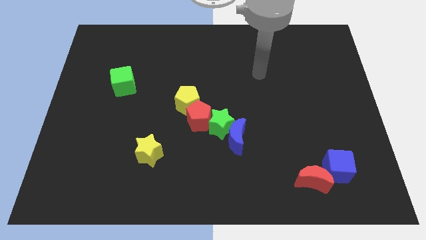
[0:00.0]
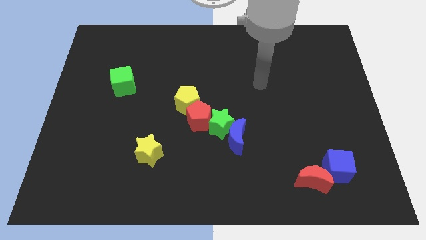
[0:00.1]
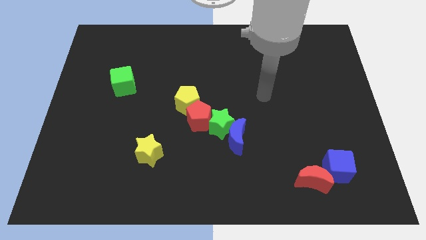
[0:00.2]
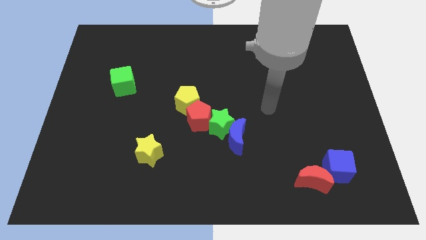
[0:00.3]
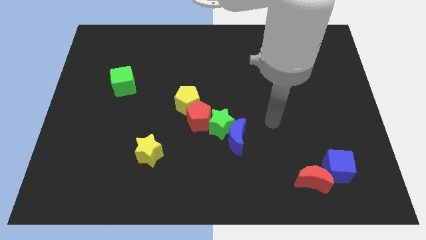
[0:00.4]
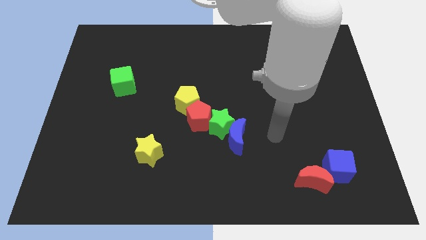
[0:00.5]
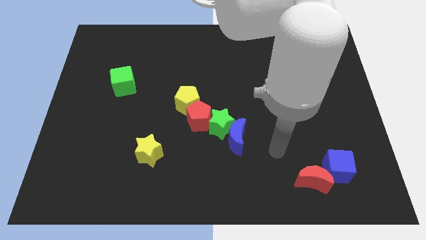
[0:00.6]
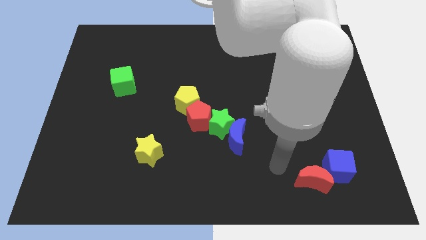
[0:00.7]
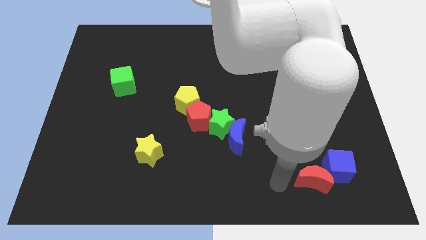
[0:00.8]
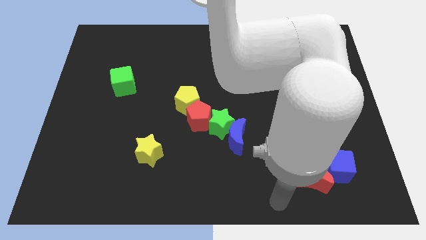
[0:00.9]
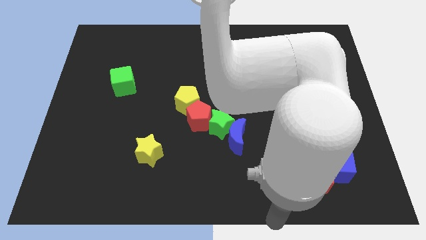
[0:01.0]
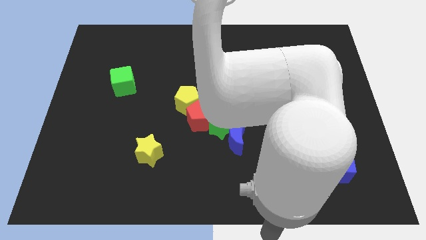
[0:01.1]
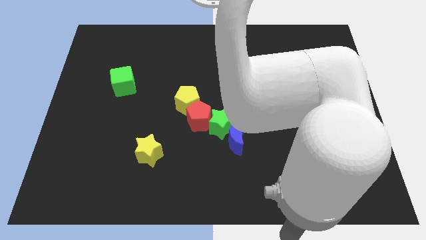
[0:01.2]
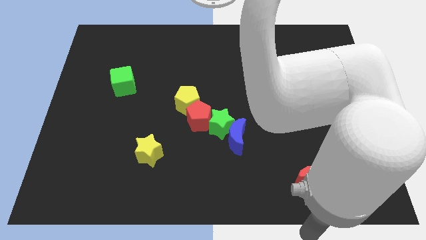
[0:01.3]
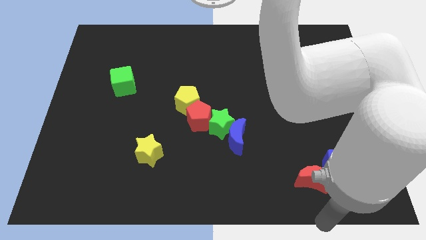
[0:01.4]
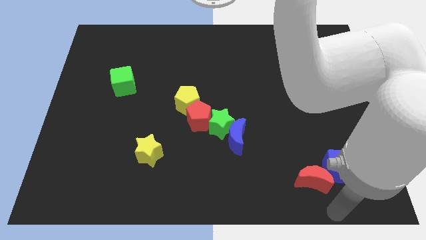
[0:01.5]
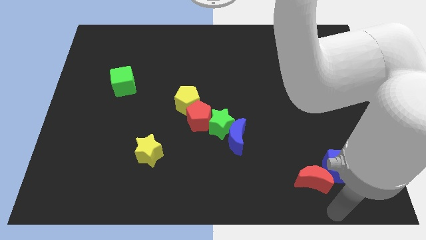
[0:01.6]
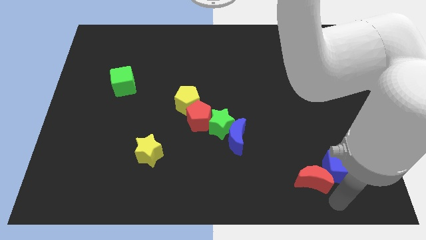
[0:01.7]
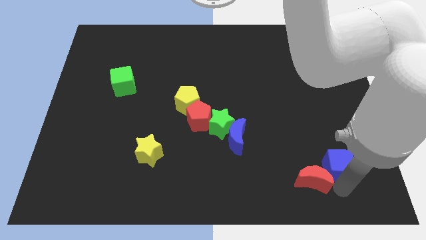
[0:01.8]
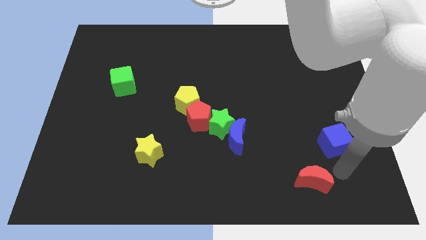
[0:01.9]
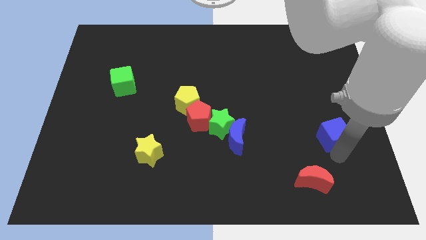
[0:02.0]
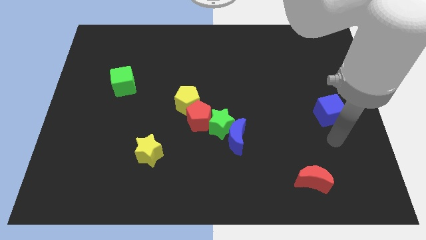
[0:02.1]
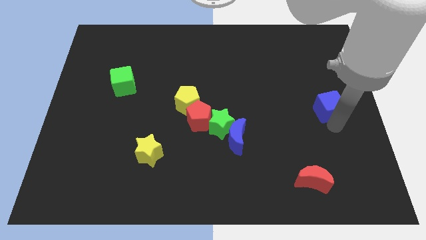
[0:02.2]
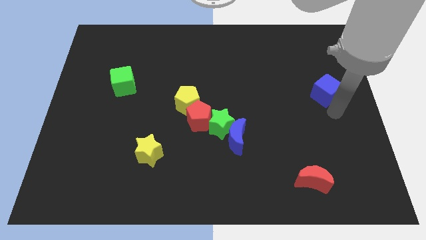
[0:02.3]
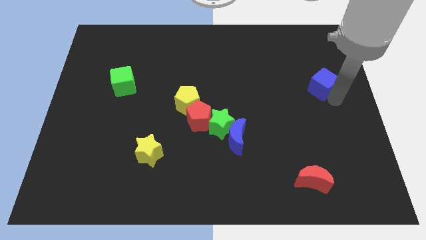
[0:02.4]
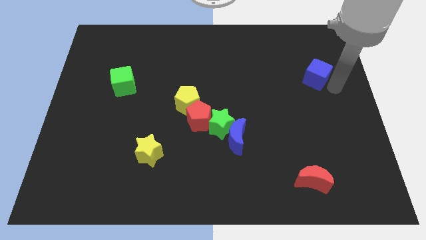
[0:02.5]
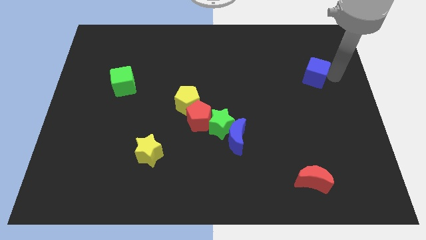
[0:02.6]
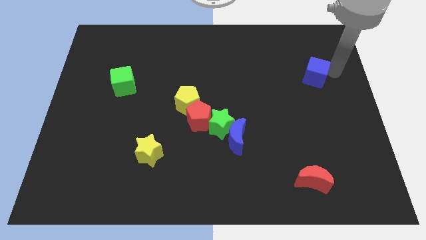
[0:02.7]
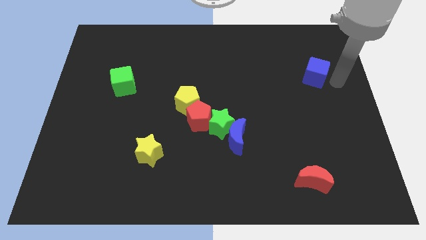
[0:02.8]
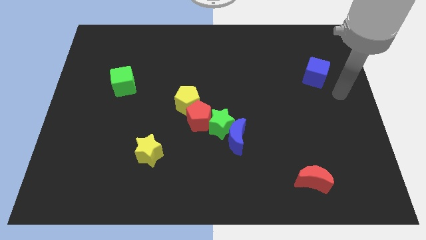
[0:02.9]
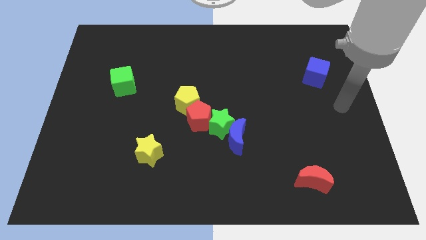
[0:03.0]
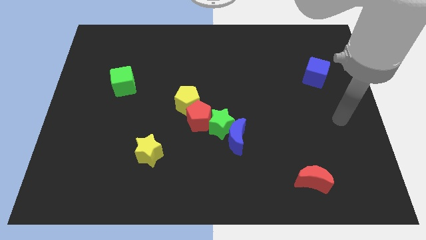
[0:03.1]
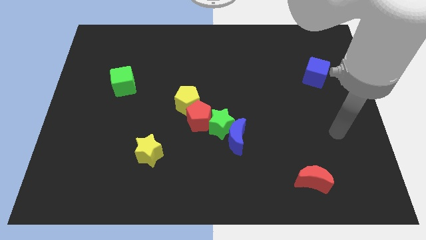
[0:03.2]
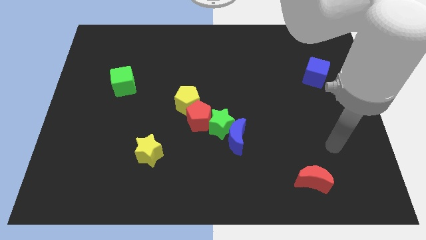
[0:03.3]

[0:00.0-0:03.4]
move the blue cube diagonally to blue crescent

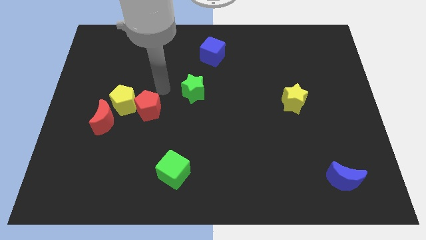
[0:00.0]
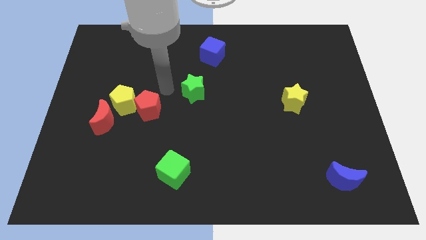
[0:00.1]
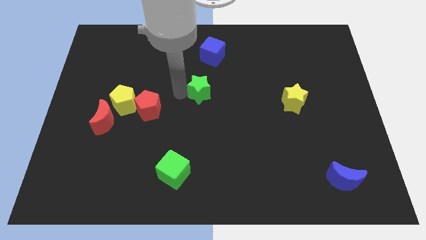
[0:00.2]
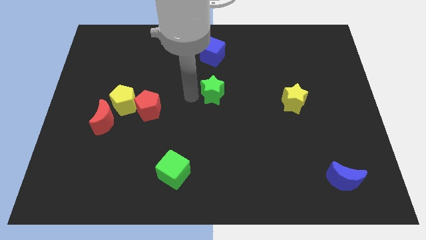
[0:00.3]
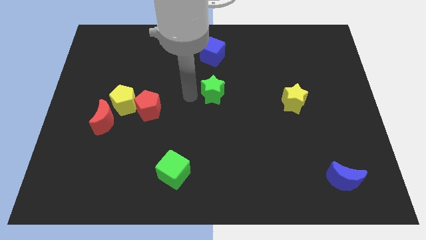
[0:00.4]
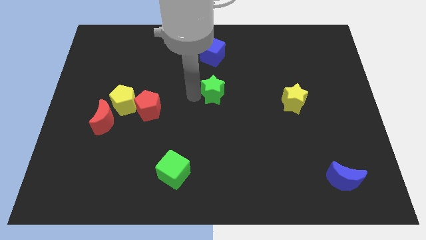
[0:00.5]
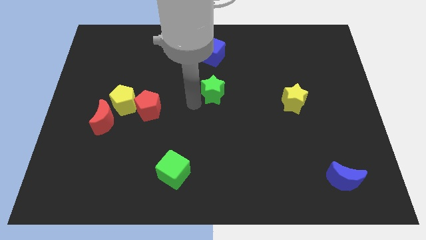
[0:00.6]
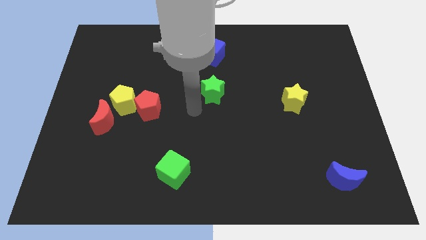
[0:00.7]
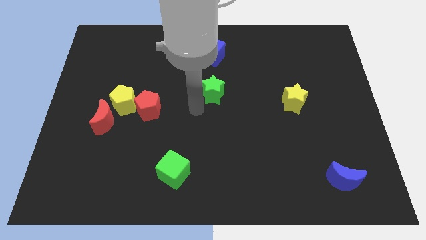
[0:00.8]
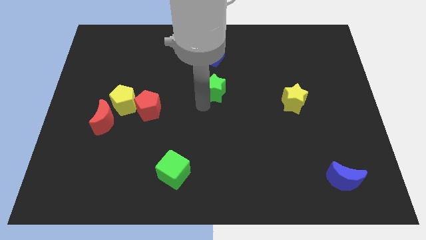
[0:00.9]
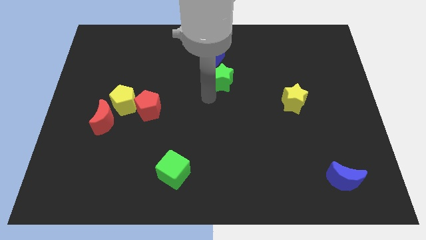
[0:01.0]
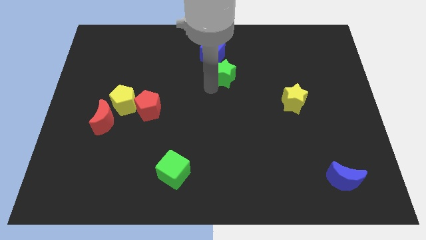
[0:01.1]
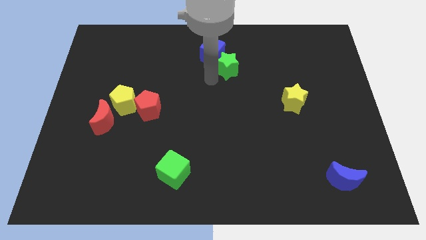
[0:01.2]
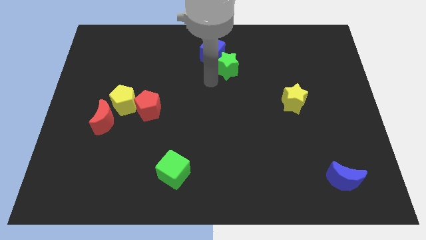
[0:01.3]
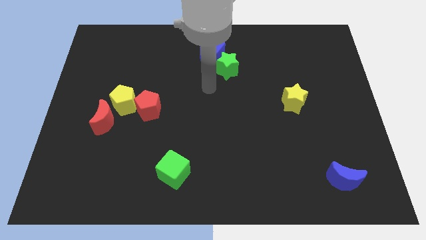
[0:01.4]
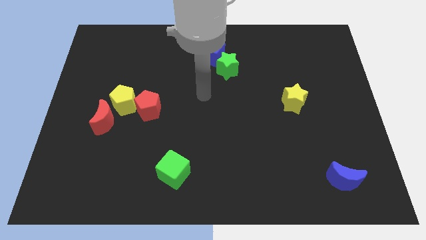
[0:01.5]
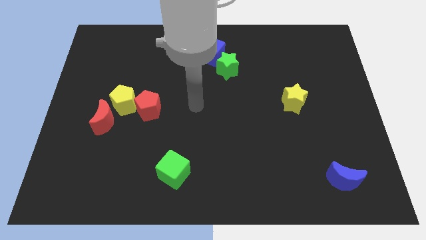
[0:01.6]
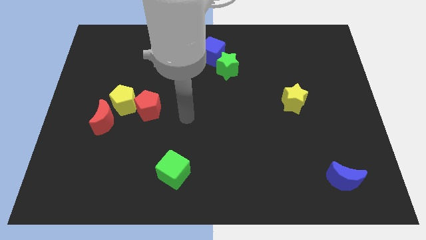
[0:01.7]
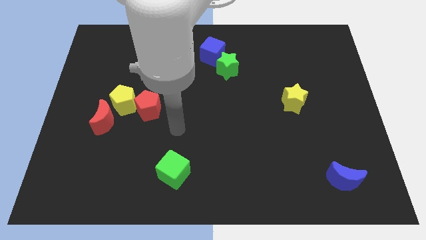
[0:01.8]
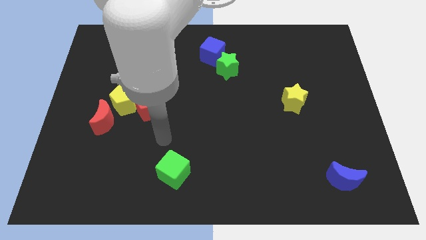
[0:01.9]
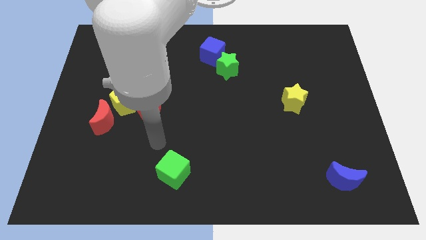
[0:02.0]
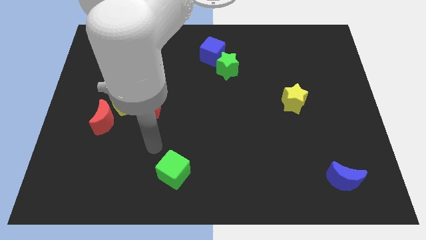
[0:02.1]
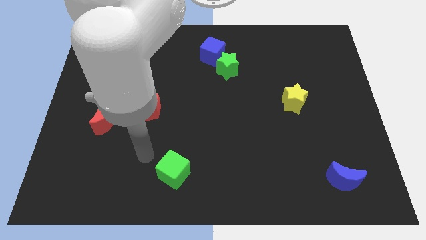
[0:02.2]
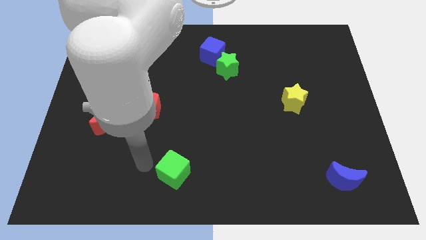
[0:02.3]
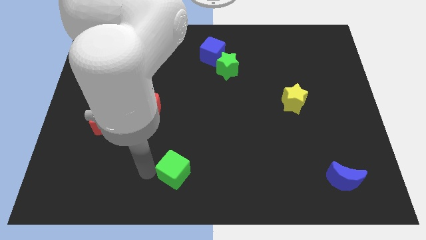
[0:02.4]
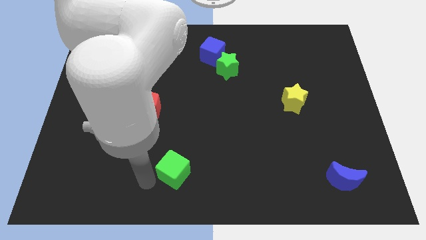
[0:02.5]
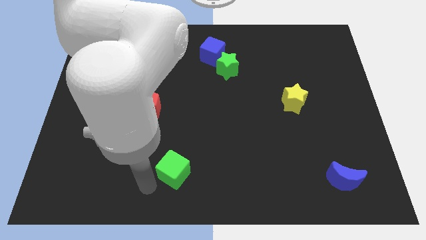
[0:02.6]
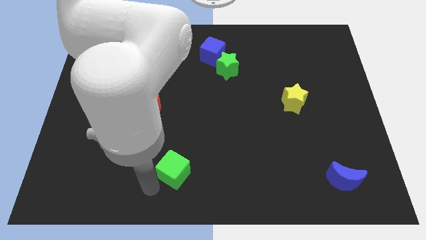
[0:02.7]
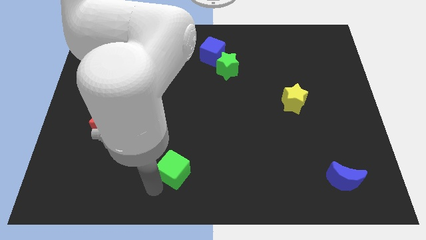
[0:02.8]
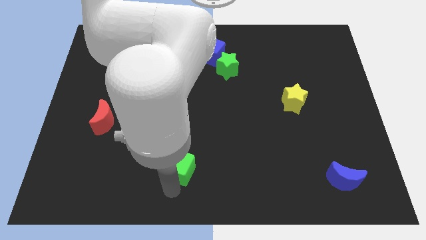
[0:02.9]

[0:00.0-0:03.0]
push the green star diagonally to the bottom right to the blue cube

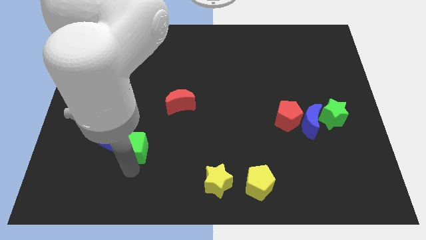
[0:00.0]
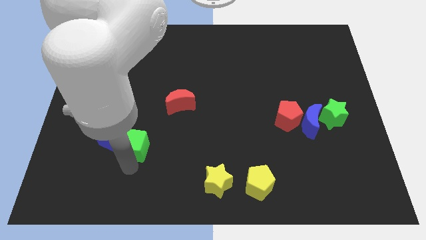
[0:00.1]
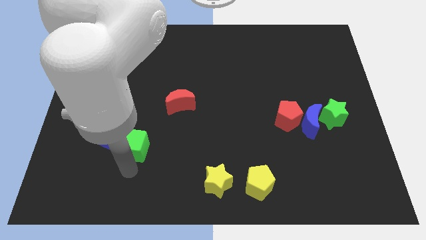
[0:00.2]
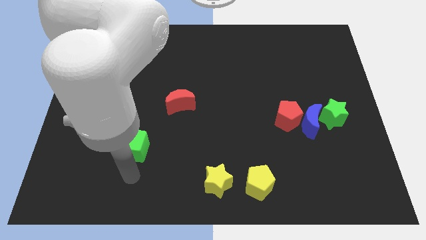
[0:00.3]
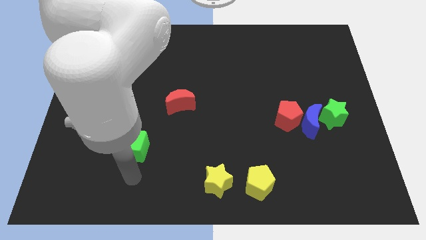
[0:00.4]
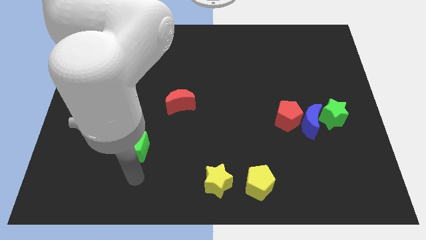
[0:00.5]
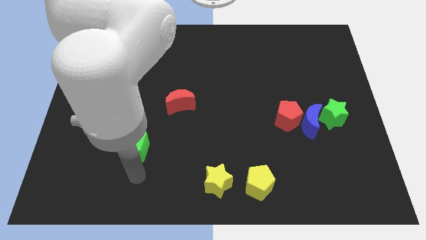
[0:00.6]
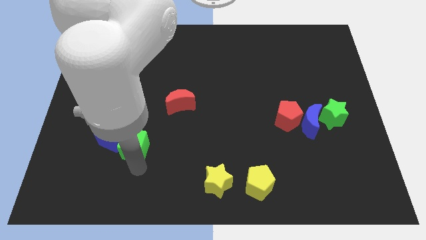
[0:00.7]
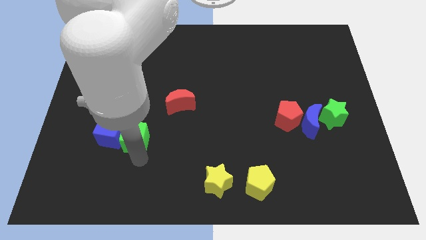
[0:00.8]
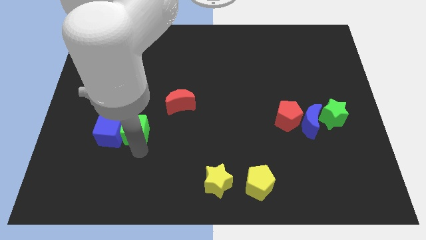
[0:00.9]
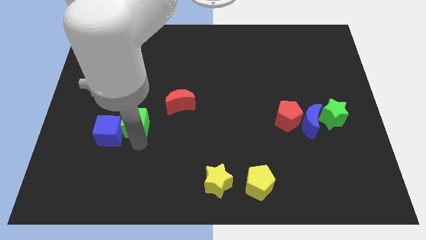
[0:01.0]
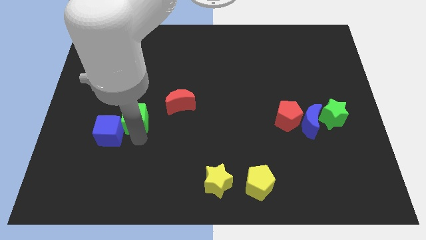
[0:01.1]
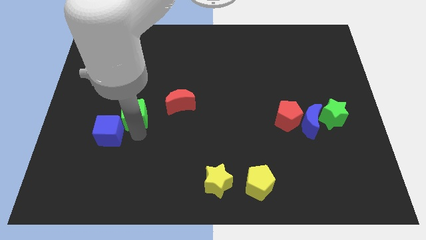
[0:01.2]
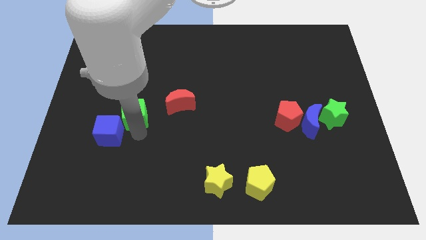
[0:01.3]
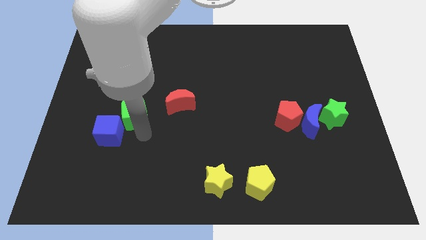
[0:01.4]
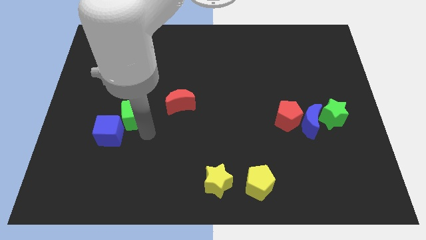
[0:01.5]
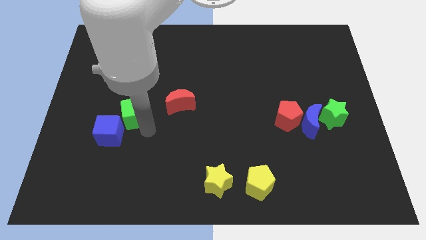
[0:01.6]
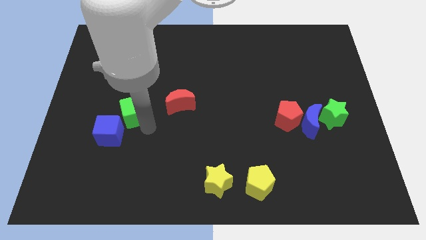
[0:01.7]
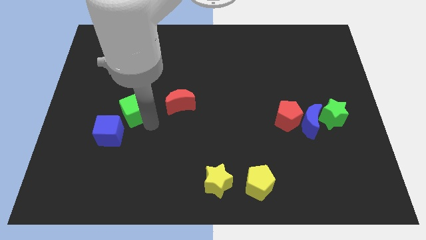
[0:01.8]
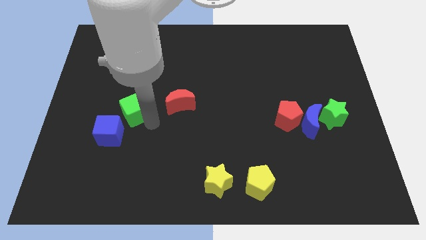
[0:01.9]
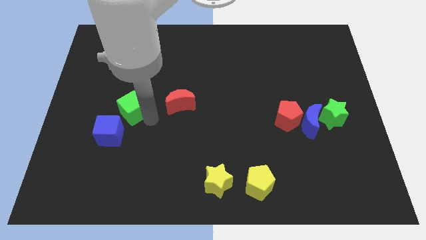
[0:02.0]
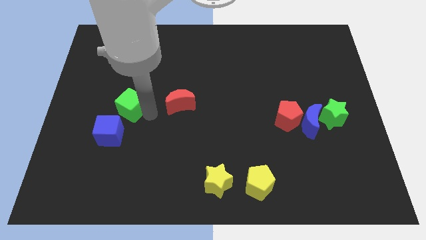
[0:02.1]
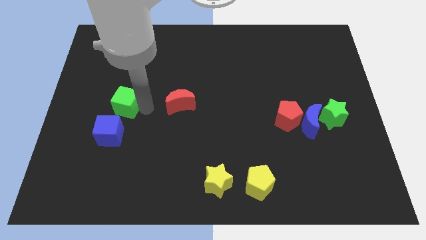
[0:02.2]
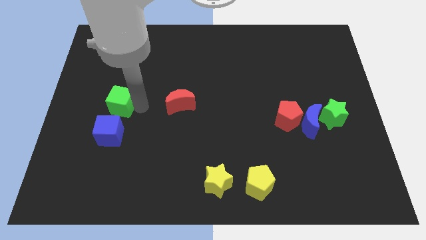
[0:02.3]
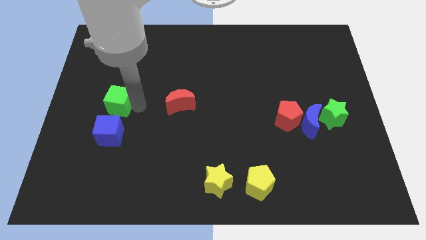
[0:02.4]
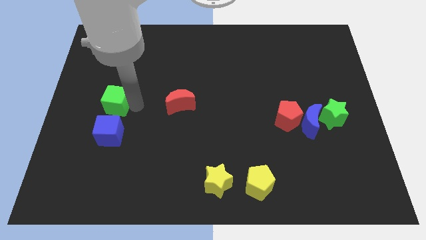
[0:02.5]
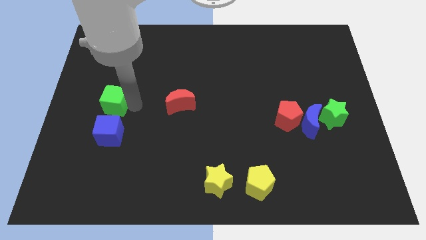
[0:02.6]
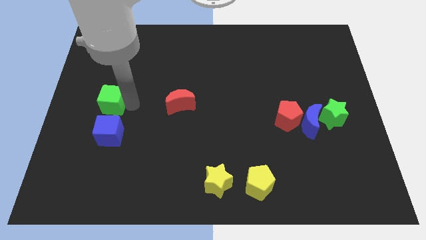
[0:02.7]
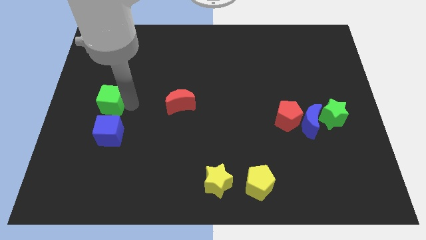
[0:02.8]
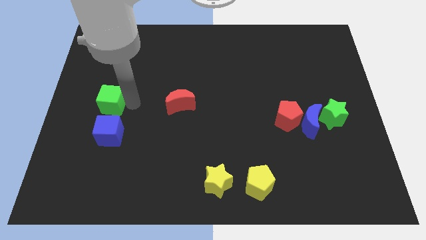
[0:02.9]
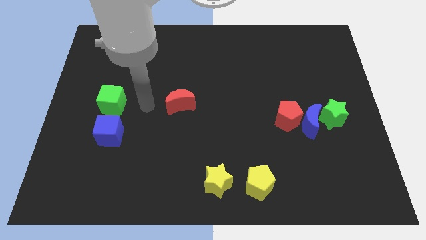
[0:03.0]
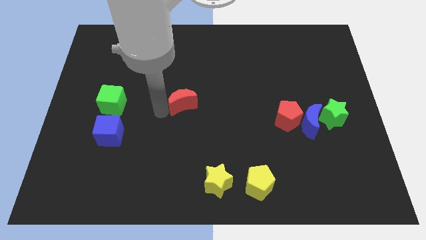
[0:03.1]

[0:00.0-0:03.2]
put the green cube vertically above the blue cube
